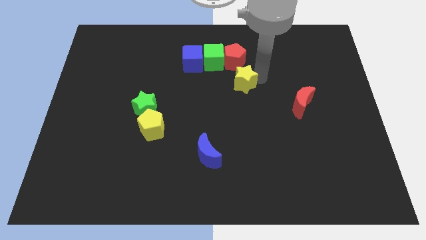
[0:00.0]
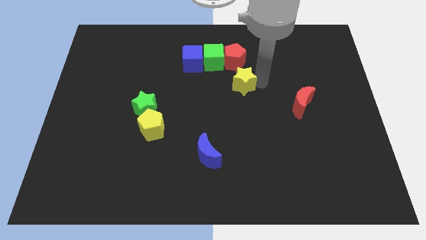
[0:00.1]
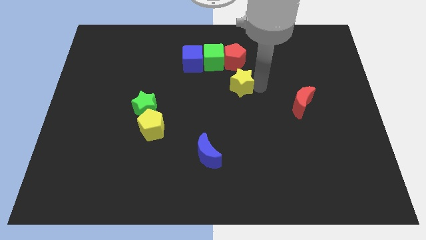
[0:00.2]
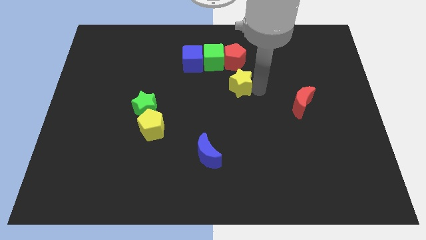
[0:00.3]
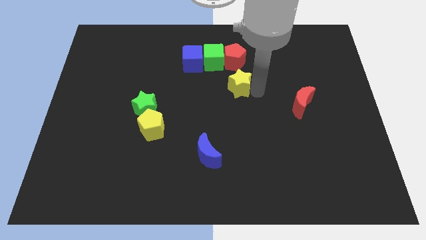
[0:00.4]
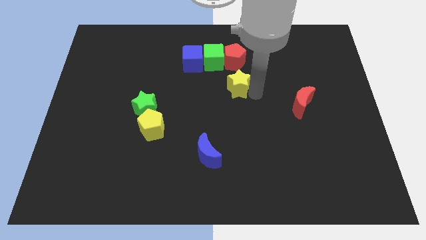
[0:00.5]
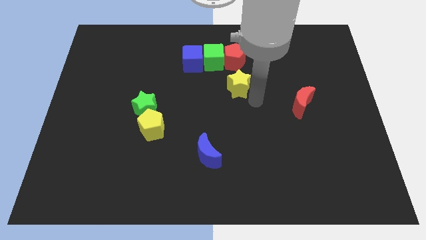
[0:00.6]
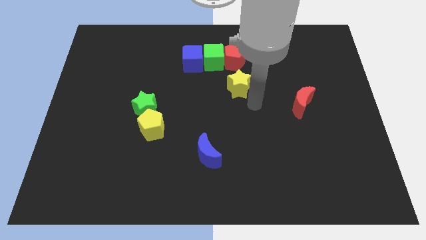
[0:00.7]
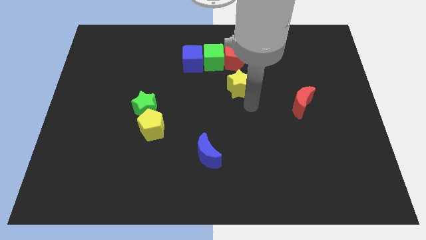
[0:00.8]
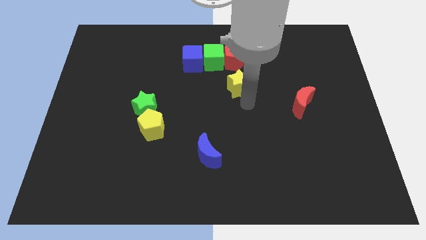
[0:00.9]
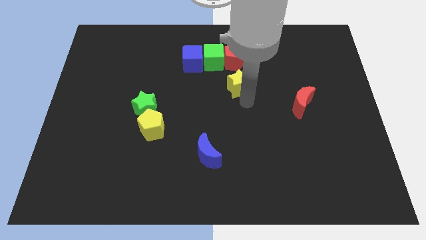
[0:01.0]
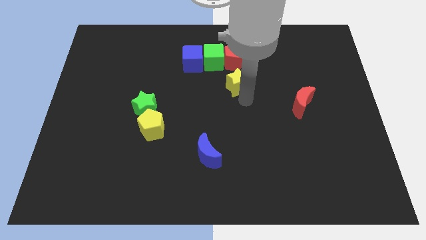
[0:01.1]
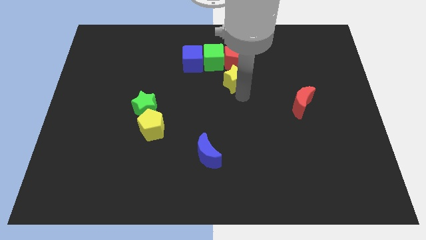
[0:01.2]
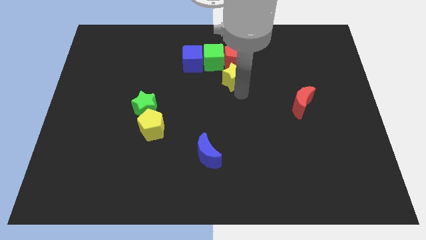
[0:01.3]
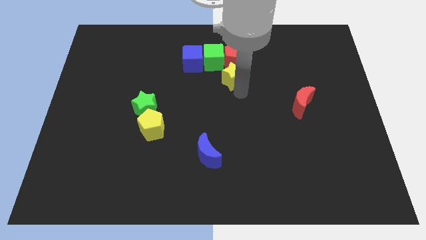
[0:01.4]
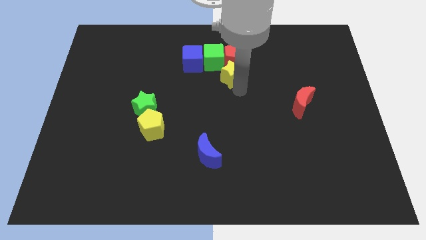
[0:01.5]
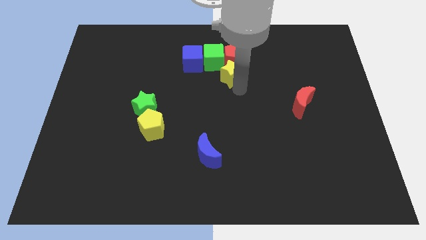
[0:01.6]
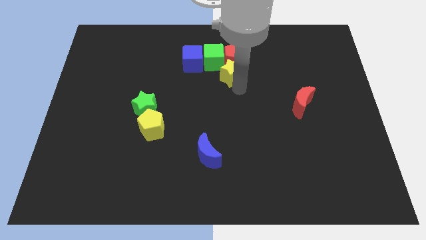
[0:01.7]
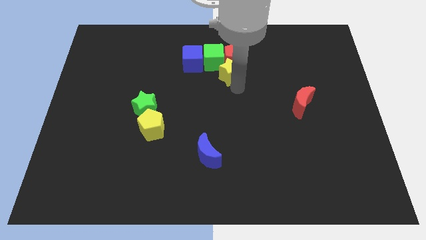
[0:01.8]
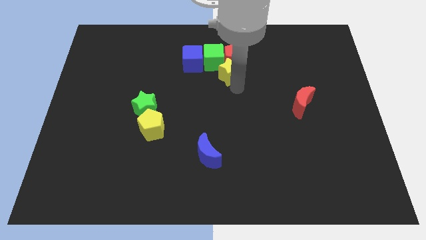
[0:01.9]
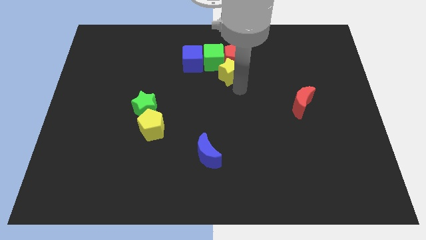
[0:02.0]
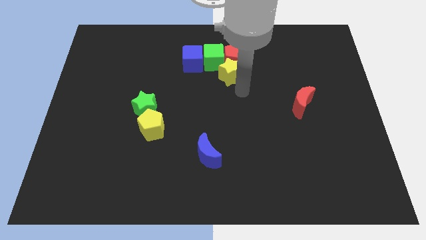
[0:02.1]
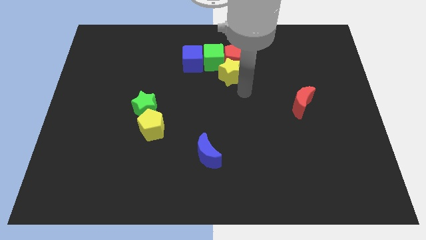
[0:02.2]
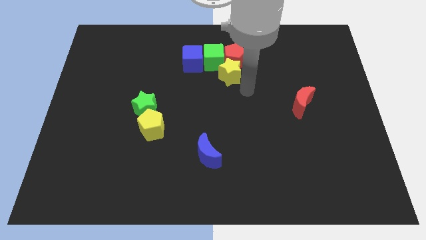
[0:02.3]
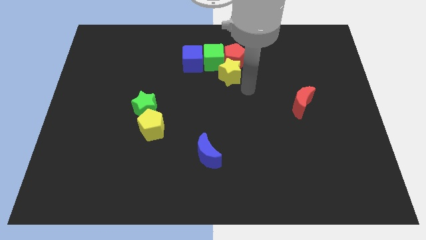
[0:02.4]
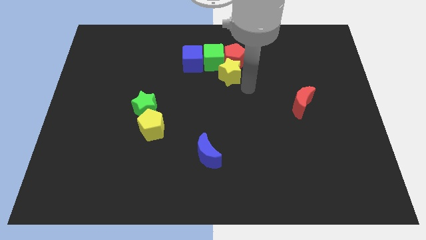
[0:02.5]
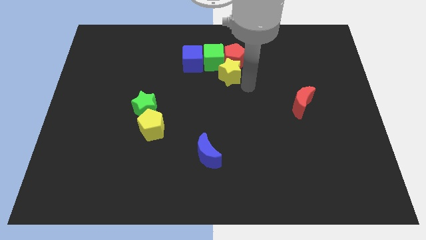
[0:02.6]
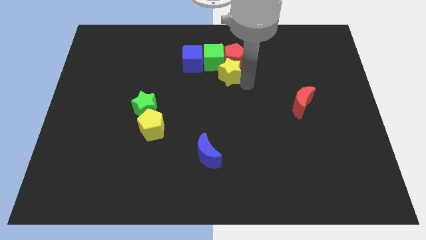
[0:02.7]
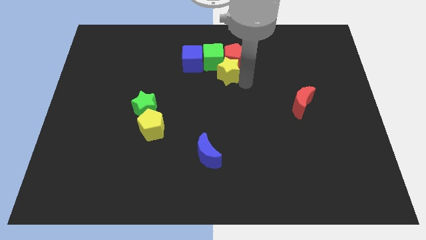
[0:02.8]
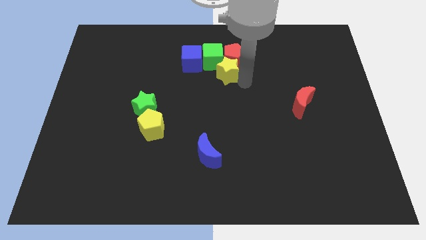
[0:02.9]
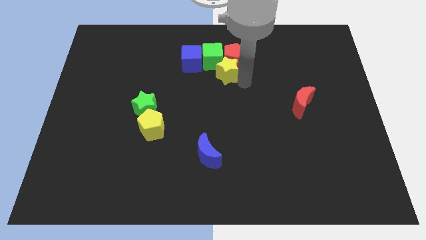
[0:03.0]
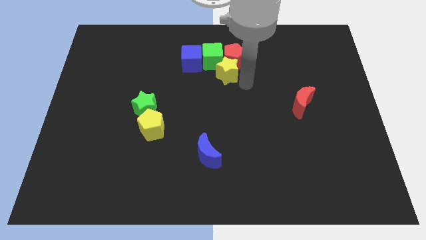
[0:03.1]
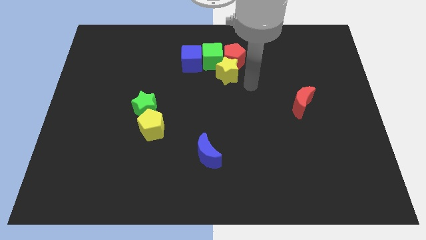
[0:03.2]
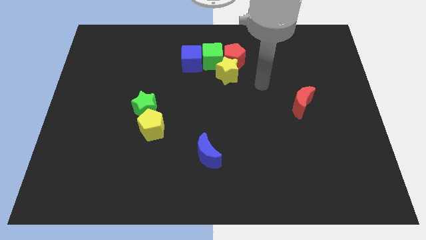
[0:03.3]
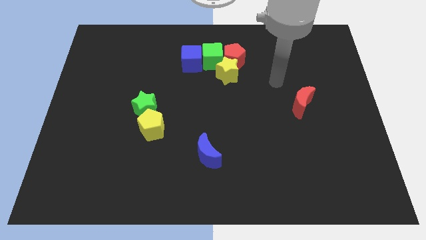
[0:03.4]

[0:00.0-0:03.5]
push the yellow star to the bottom of the green cube

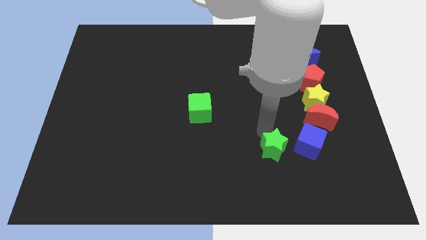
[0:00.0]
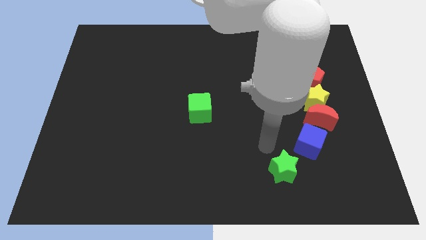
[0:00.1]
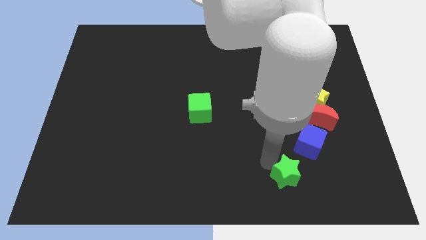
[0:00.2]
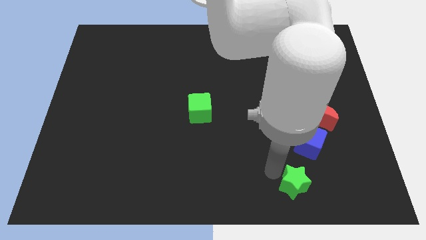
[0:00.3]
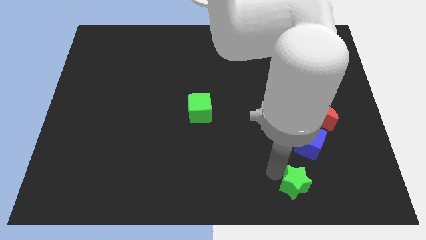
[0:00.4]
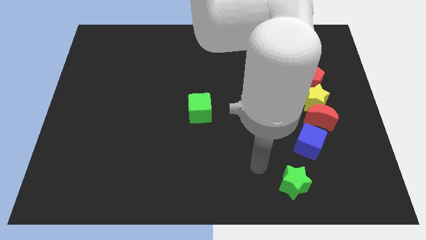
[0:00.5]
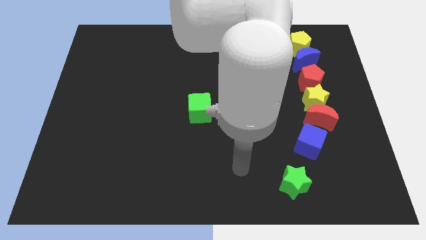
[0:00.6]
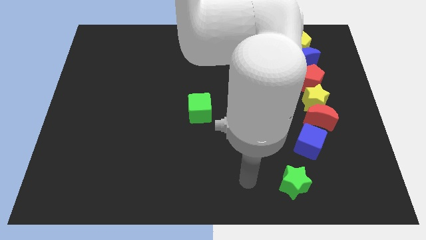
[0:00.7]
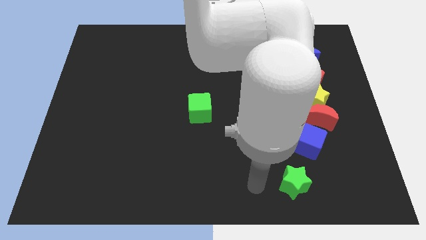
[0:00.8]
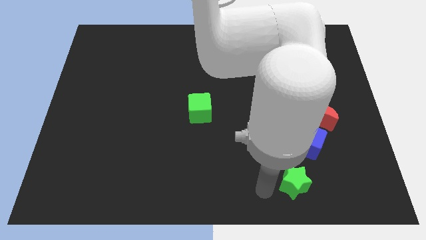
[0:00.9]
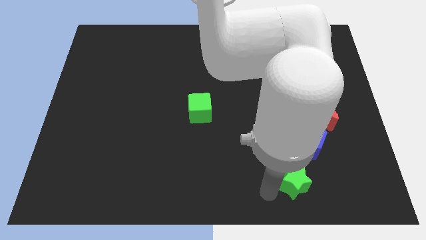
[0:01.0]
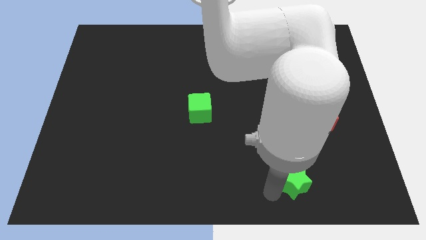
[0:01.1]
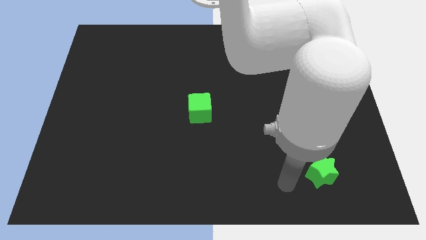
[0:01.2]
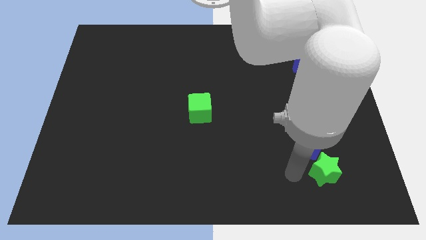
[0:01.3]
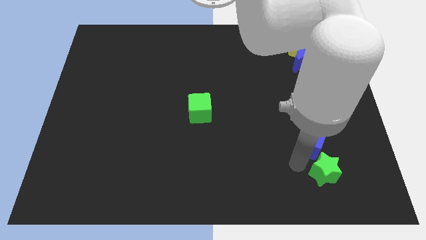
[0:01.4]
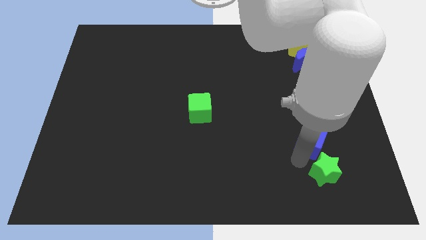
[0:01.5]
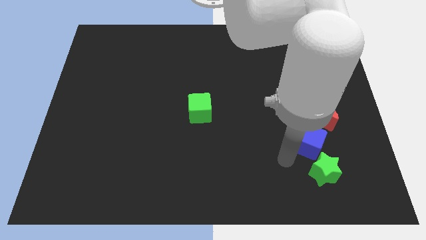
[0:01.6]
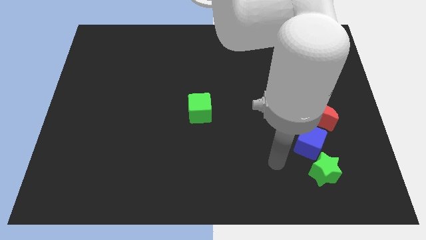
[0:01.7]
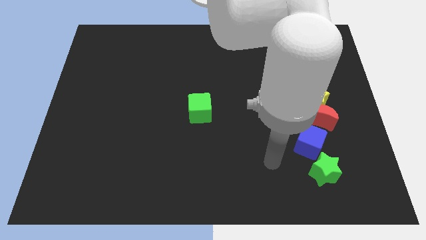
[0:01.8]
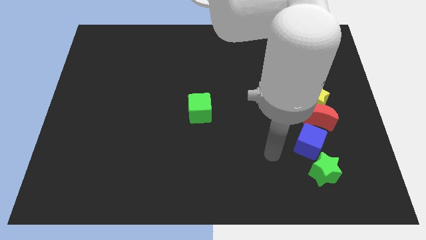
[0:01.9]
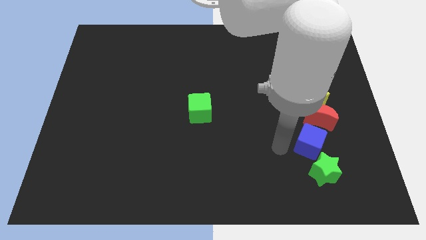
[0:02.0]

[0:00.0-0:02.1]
move green star below blue cube

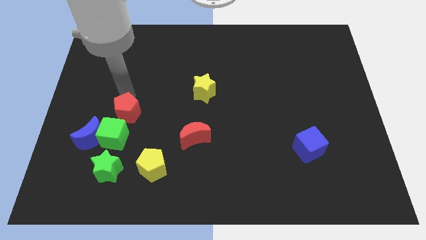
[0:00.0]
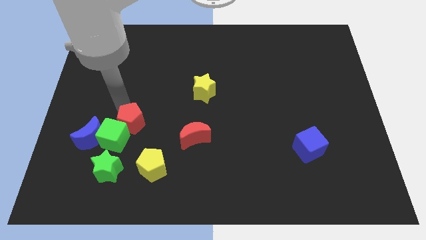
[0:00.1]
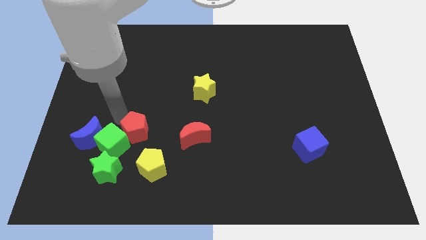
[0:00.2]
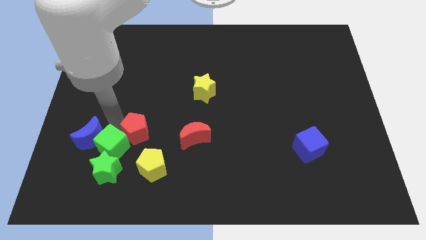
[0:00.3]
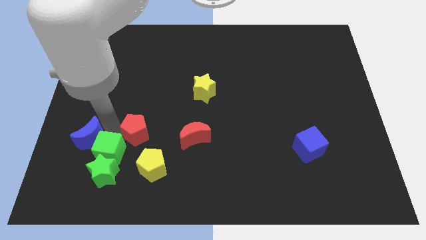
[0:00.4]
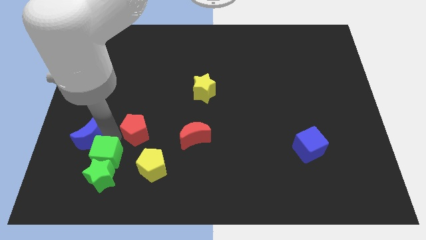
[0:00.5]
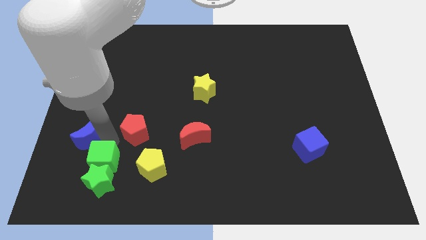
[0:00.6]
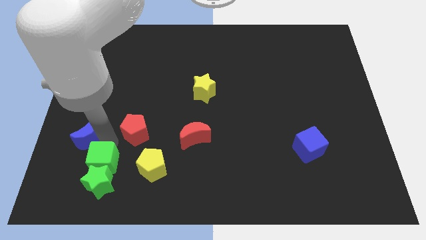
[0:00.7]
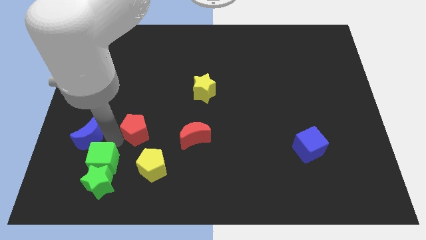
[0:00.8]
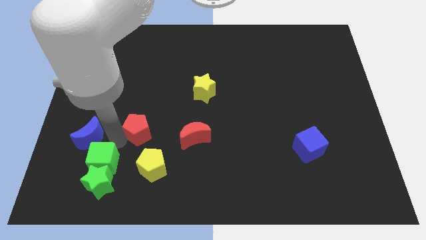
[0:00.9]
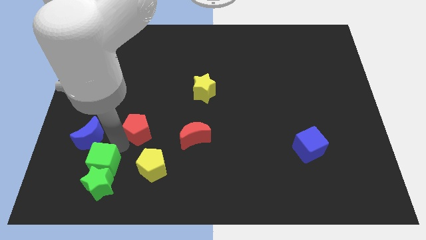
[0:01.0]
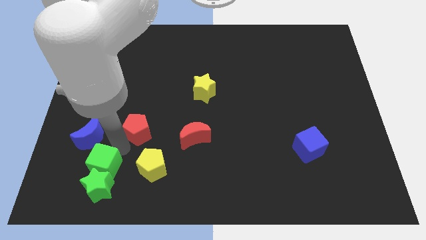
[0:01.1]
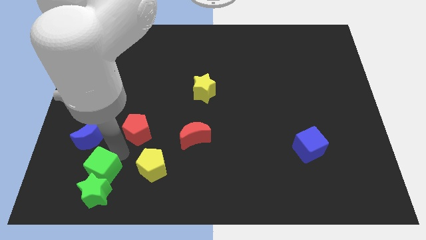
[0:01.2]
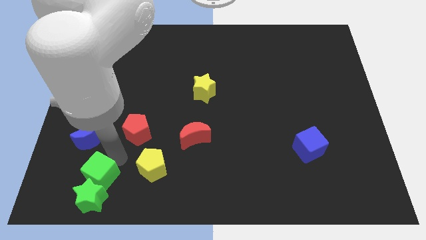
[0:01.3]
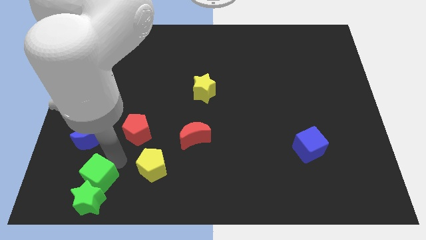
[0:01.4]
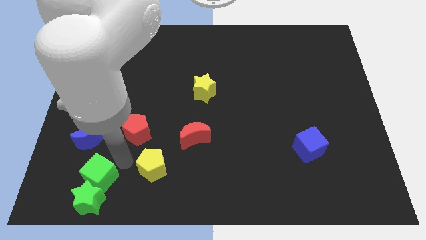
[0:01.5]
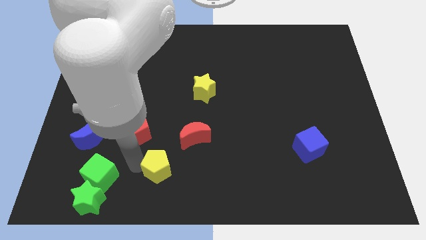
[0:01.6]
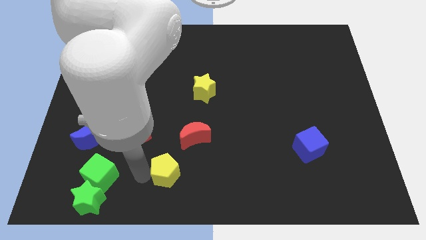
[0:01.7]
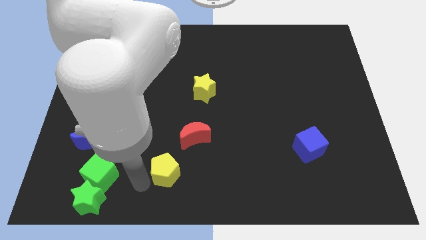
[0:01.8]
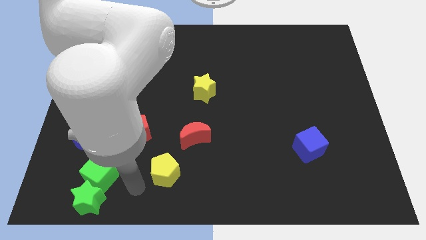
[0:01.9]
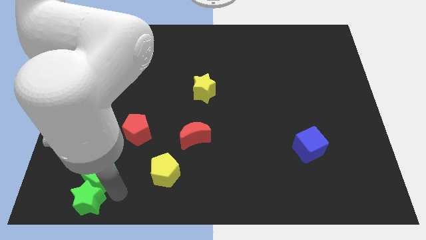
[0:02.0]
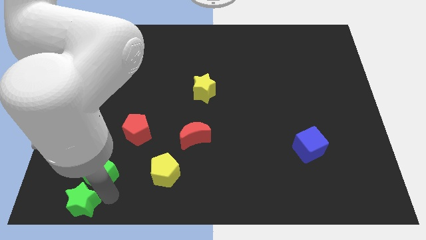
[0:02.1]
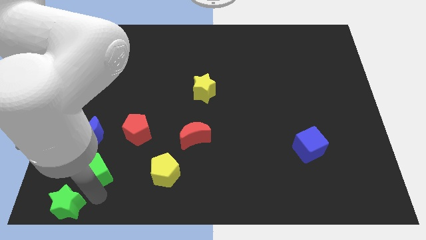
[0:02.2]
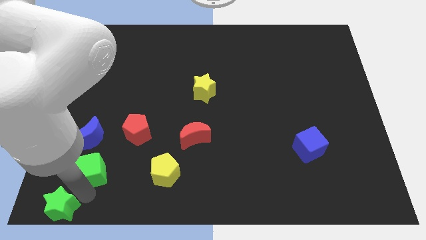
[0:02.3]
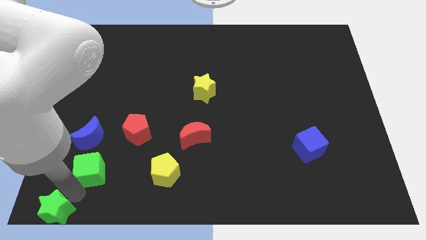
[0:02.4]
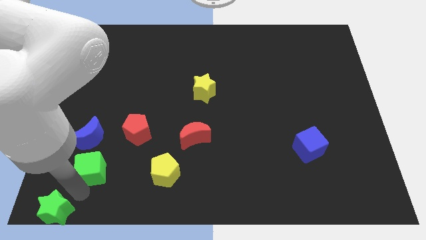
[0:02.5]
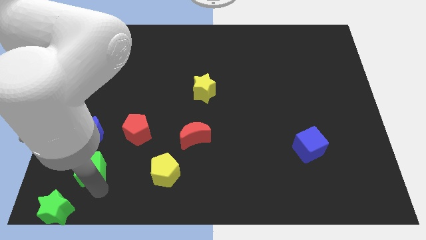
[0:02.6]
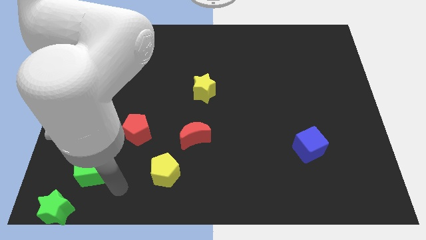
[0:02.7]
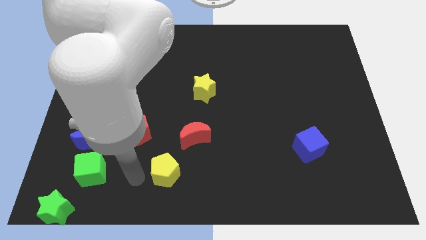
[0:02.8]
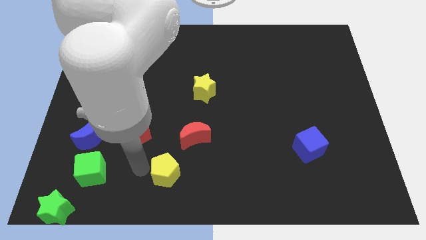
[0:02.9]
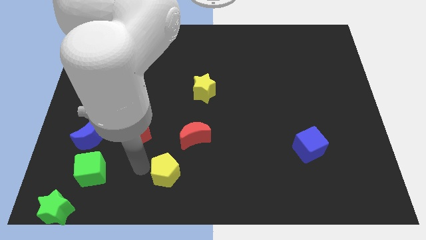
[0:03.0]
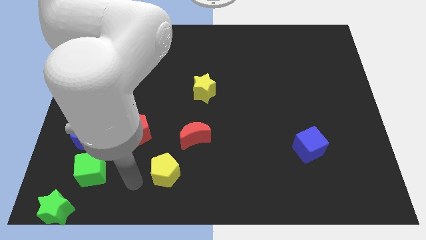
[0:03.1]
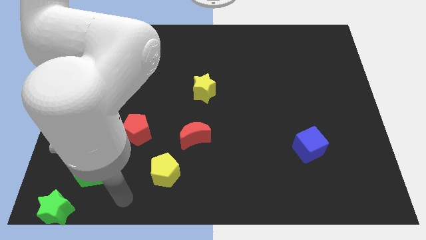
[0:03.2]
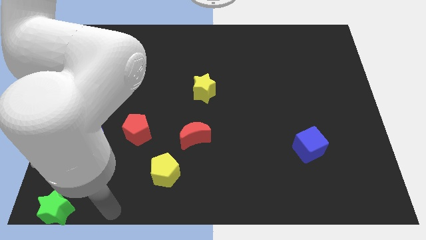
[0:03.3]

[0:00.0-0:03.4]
move the green cube into the green star
